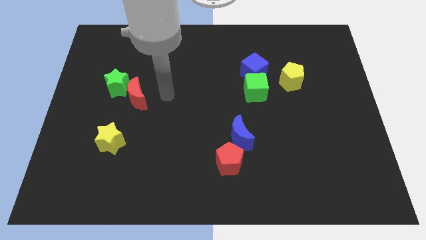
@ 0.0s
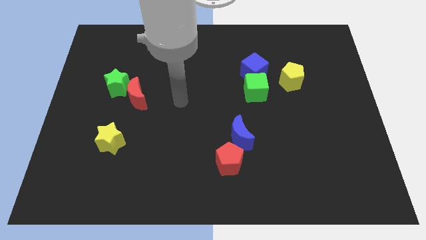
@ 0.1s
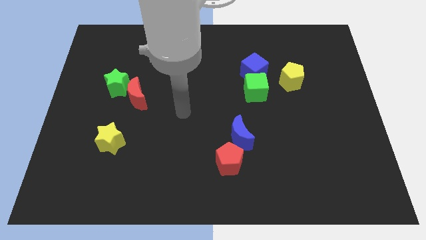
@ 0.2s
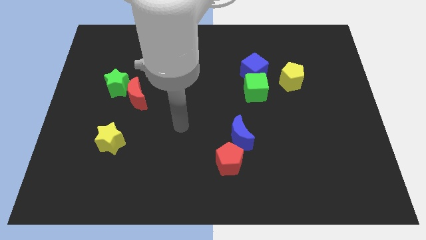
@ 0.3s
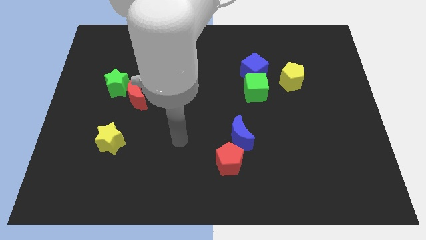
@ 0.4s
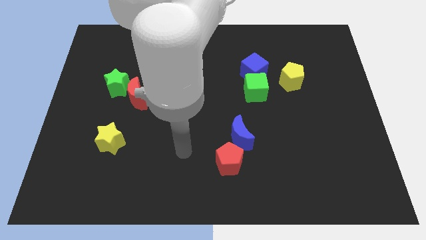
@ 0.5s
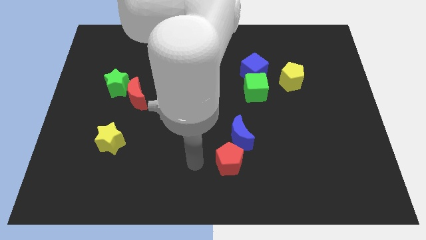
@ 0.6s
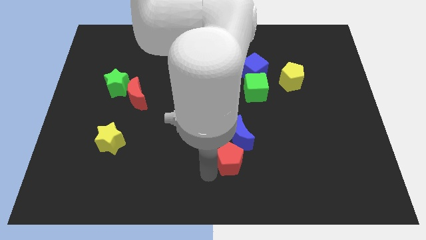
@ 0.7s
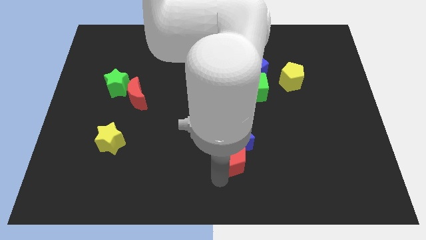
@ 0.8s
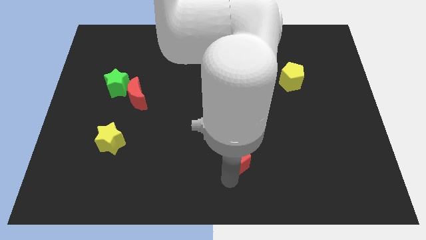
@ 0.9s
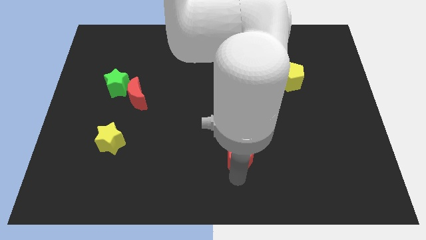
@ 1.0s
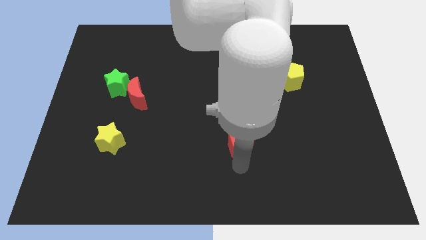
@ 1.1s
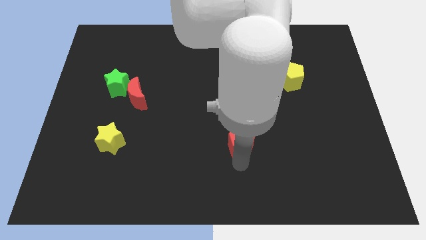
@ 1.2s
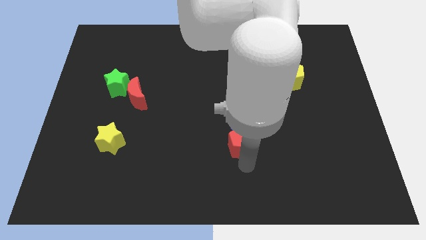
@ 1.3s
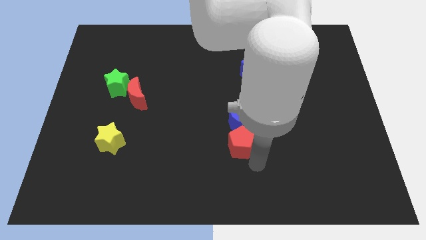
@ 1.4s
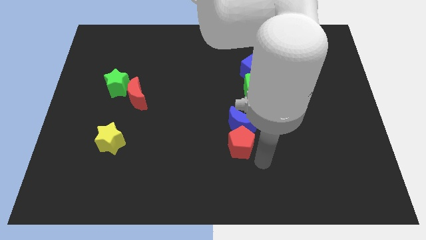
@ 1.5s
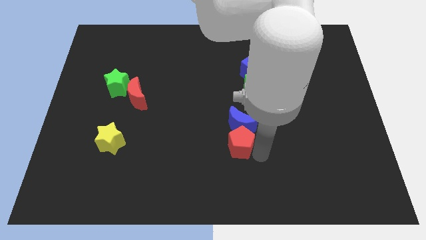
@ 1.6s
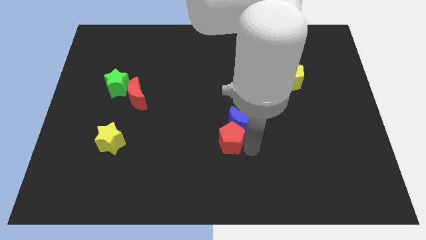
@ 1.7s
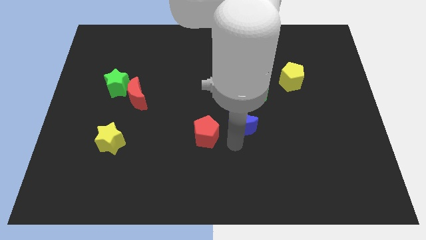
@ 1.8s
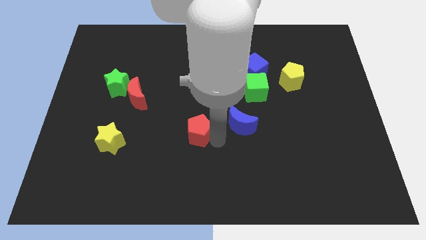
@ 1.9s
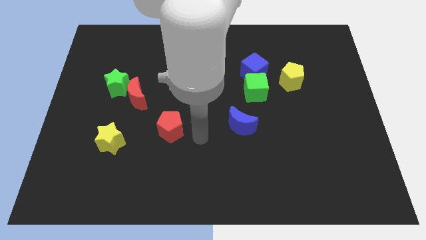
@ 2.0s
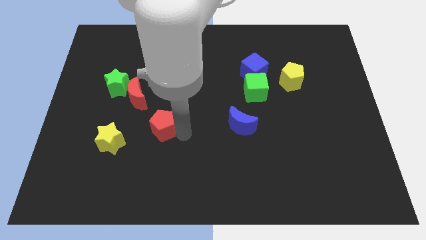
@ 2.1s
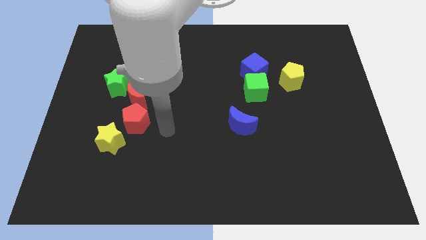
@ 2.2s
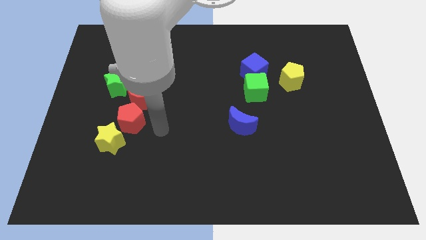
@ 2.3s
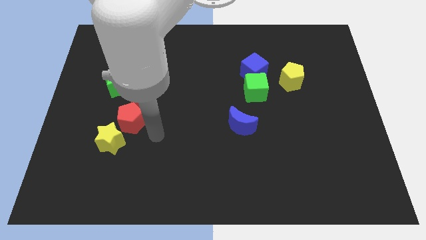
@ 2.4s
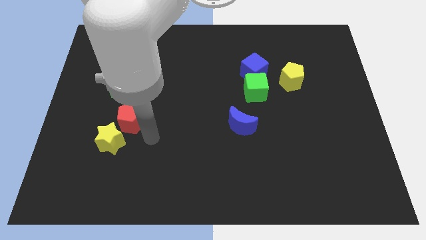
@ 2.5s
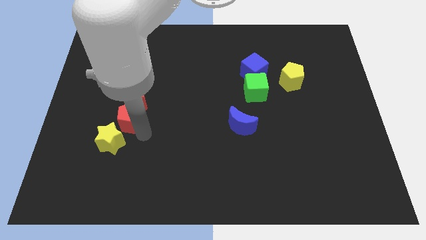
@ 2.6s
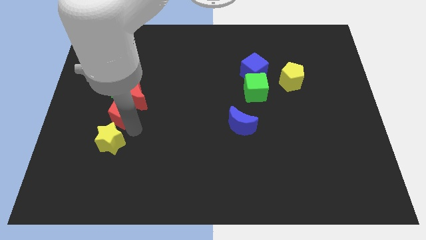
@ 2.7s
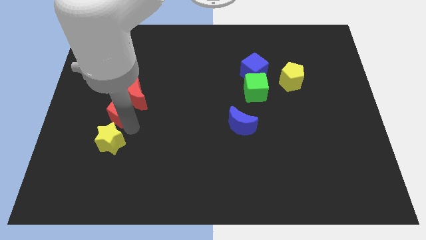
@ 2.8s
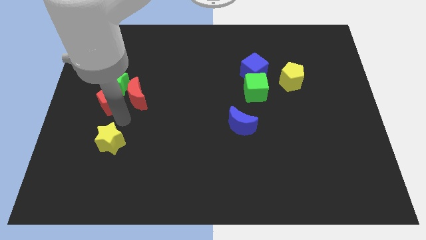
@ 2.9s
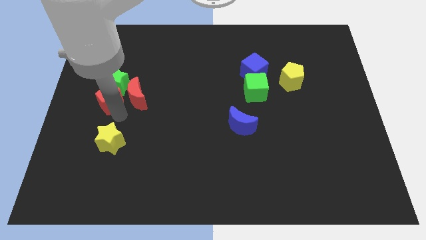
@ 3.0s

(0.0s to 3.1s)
move the red pentagon below the green star

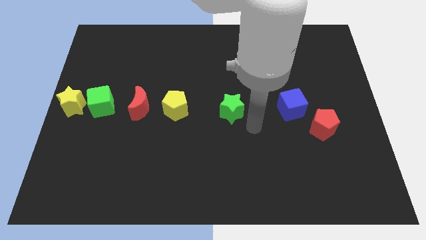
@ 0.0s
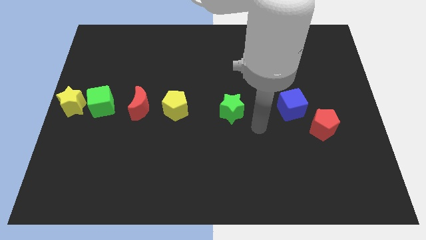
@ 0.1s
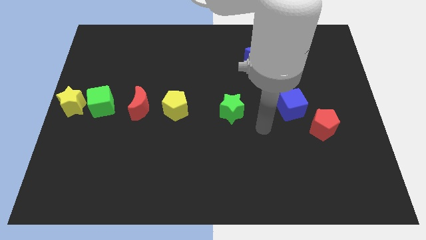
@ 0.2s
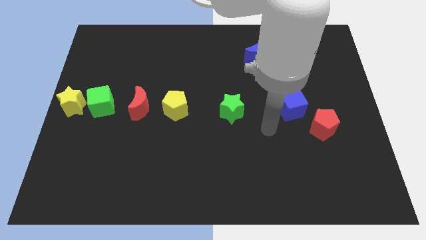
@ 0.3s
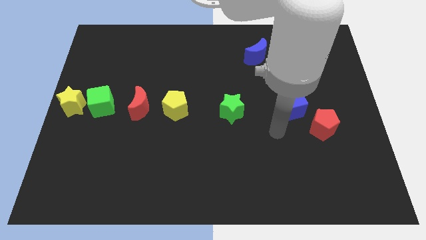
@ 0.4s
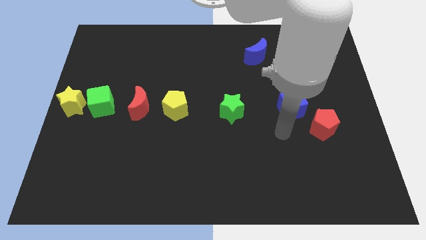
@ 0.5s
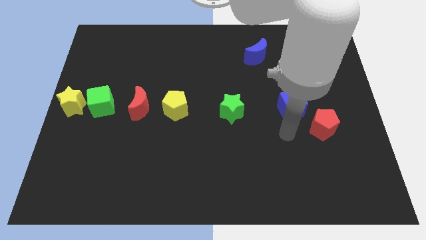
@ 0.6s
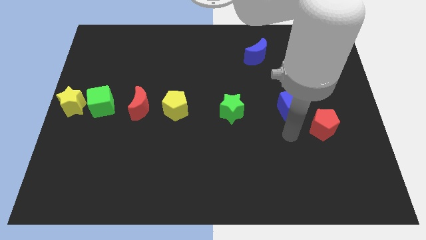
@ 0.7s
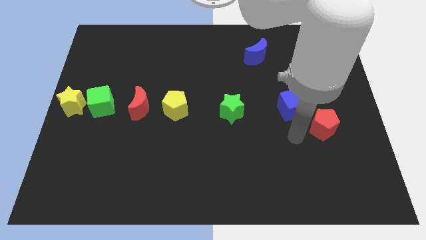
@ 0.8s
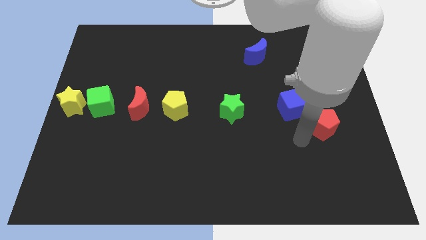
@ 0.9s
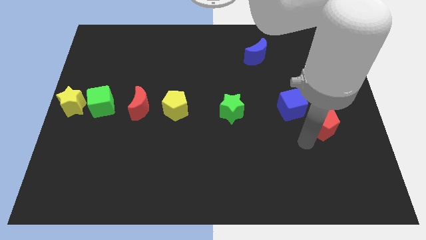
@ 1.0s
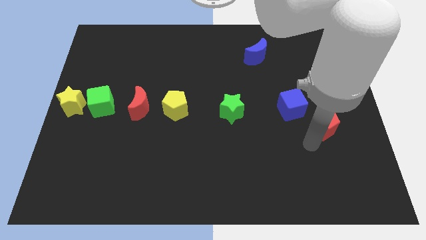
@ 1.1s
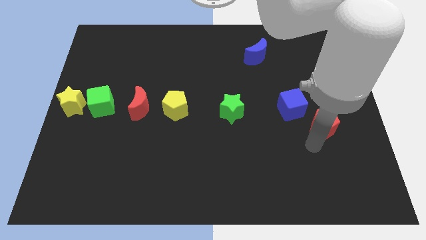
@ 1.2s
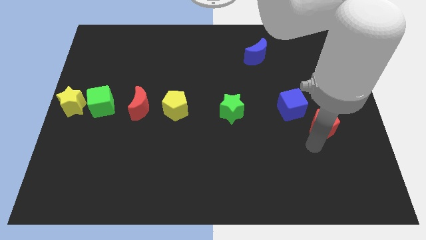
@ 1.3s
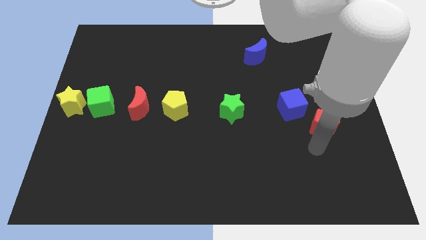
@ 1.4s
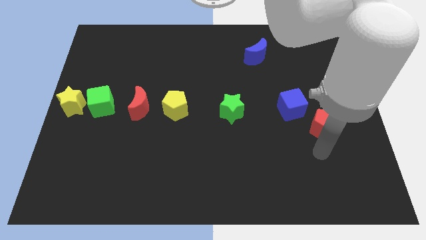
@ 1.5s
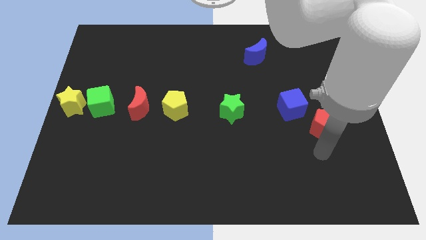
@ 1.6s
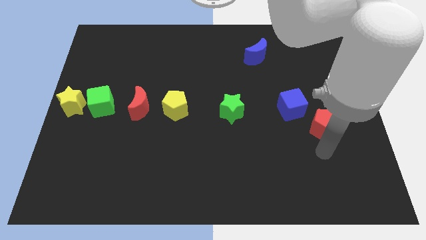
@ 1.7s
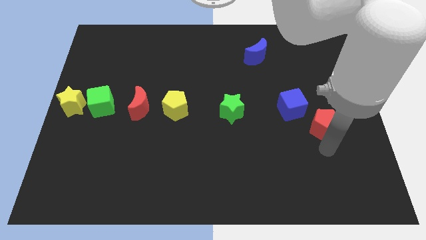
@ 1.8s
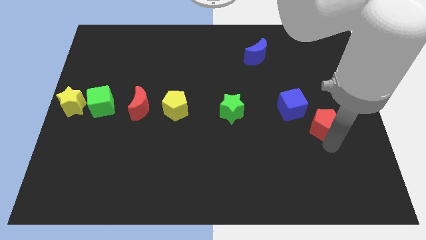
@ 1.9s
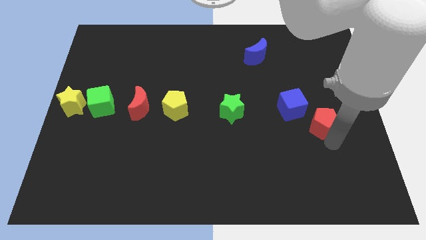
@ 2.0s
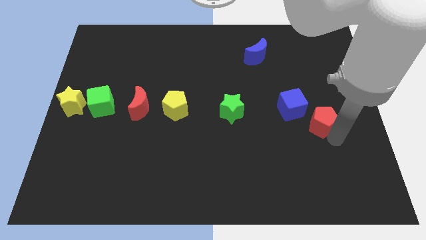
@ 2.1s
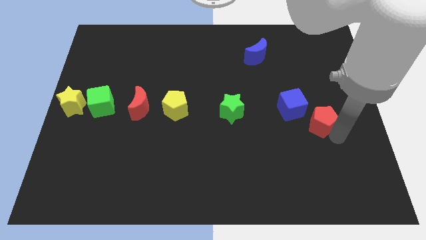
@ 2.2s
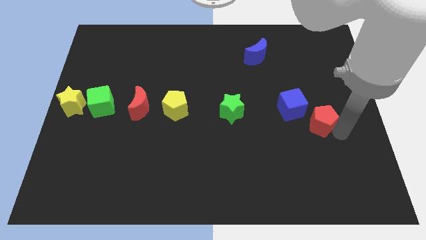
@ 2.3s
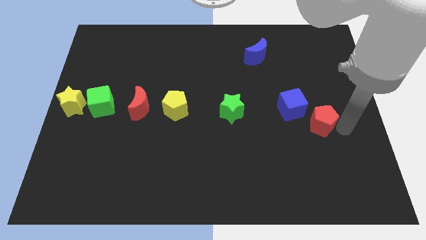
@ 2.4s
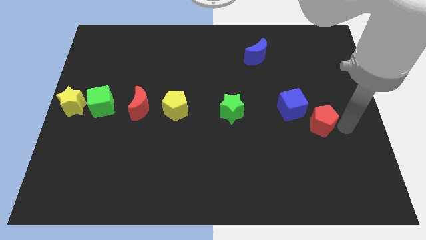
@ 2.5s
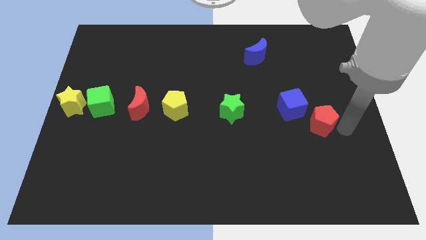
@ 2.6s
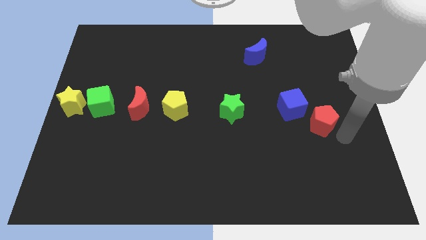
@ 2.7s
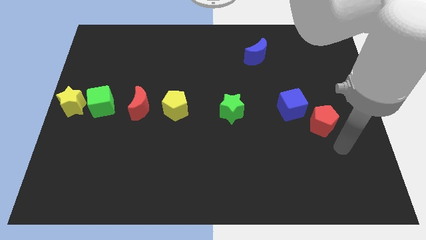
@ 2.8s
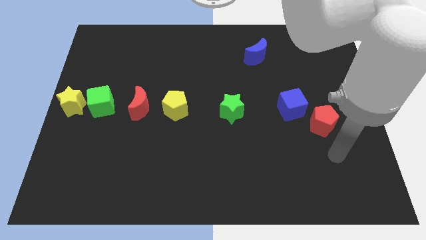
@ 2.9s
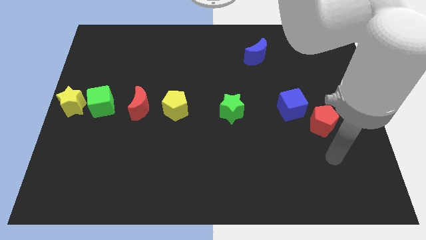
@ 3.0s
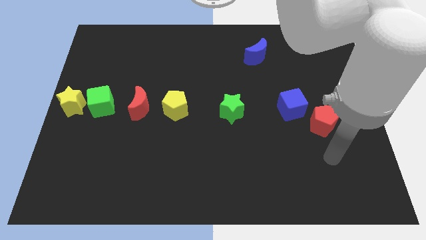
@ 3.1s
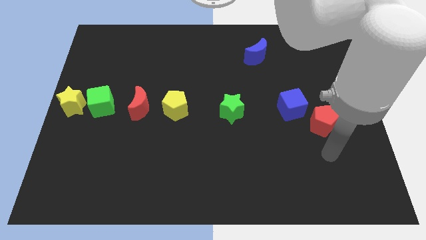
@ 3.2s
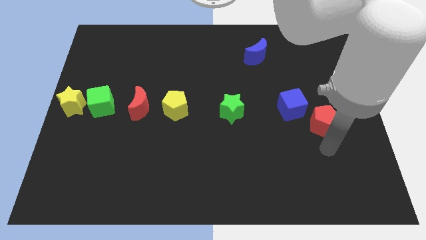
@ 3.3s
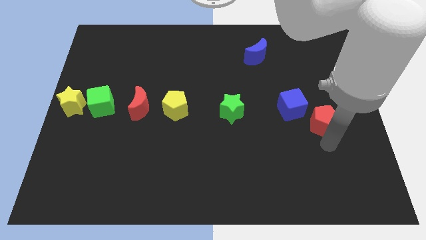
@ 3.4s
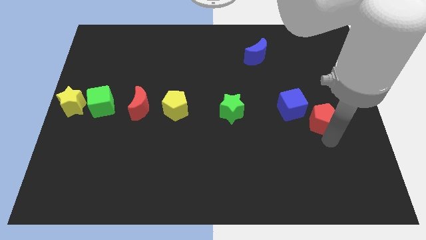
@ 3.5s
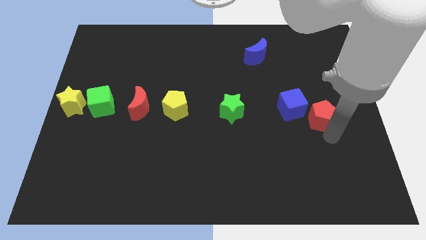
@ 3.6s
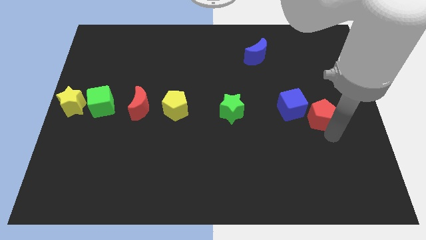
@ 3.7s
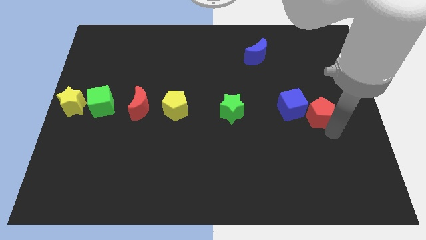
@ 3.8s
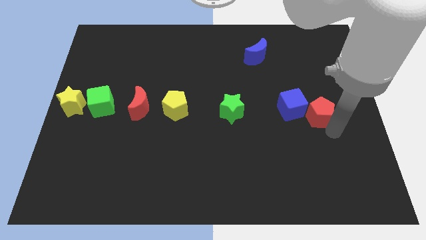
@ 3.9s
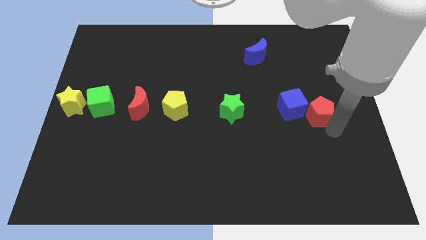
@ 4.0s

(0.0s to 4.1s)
push the red pentagon to the right of the blue cube

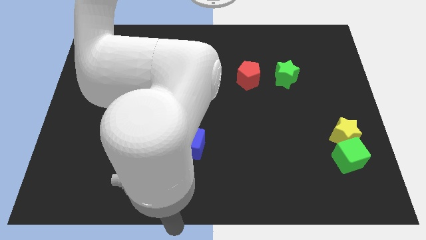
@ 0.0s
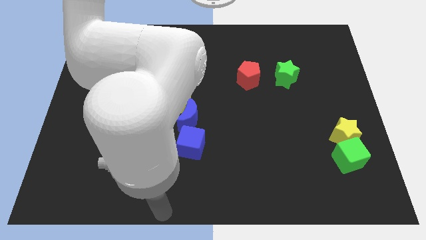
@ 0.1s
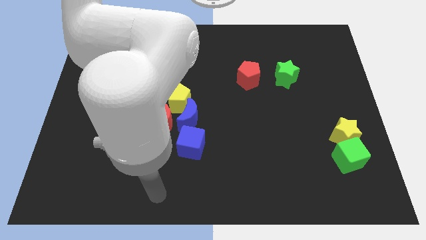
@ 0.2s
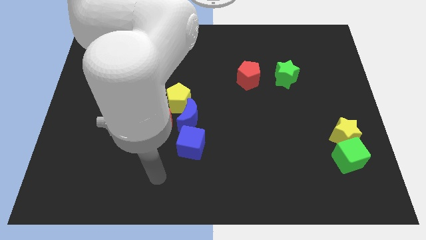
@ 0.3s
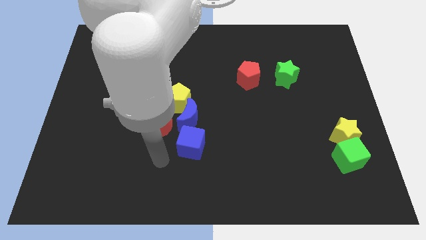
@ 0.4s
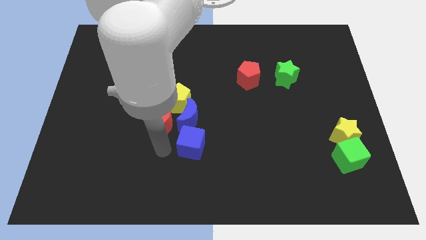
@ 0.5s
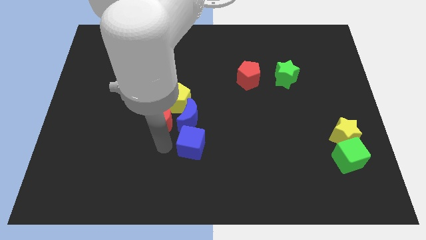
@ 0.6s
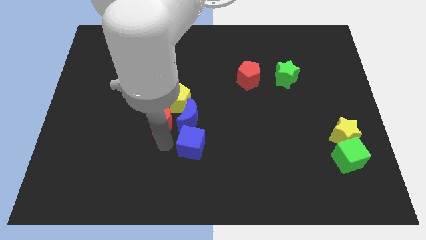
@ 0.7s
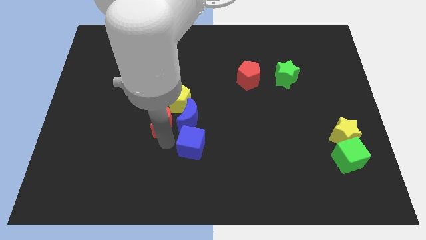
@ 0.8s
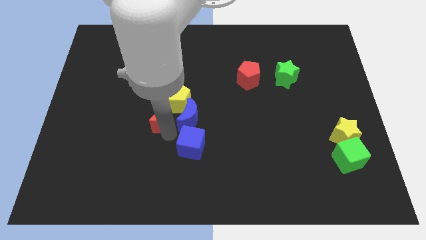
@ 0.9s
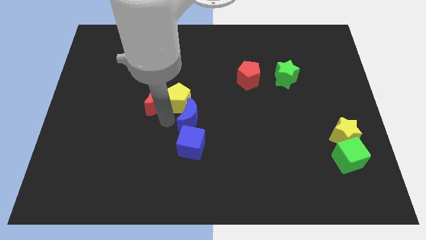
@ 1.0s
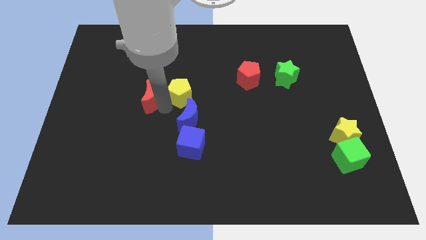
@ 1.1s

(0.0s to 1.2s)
place the red crescent left to the yellow pentagon

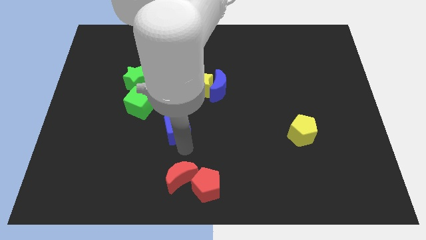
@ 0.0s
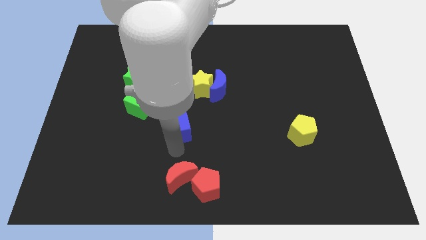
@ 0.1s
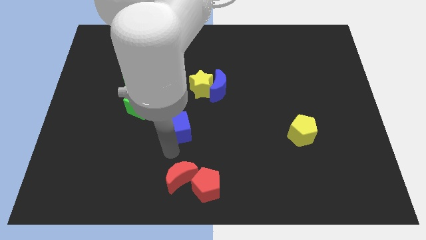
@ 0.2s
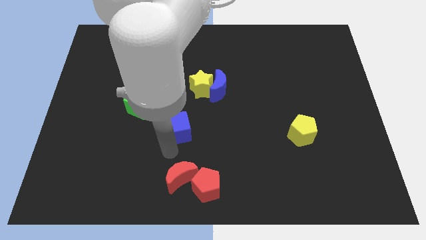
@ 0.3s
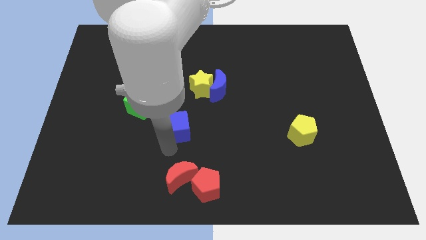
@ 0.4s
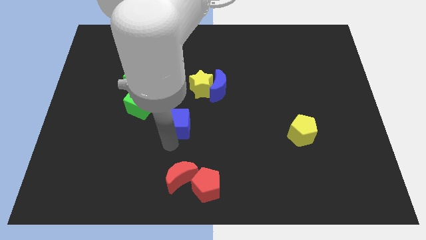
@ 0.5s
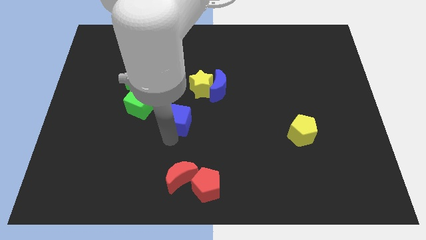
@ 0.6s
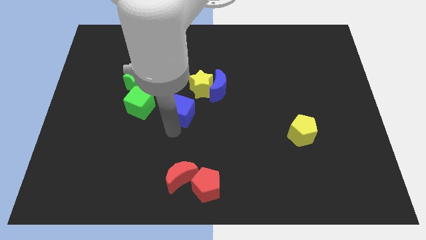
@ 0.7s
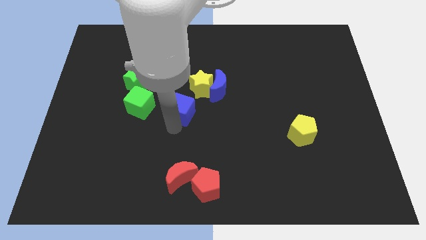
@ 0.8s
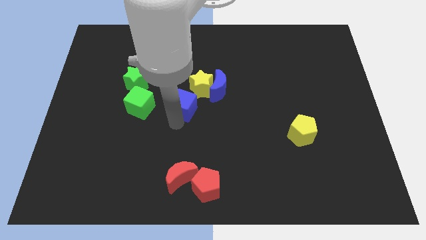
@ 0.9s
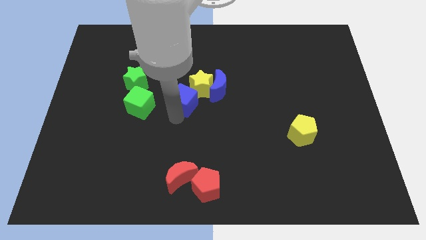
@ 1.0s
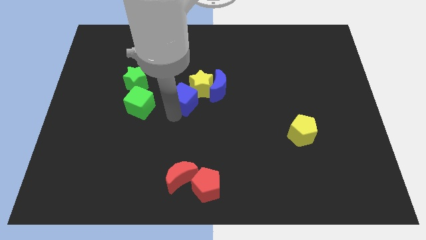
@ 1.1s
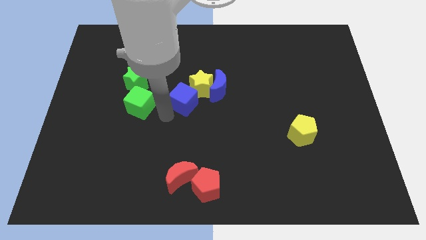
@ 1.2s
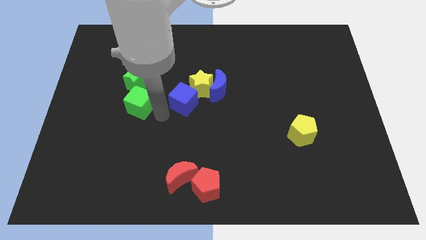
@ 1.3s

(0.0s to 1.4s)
push the blue cube into the yellow star
